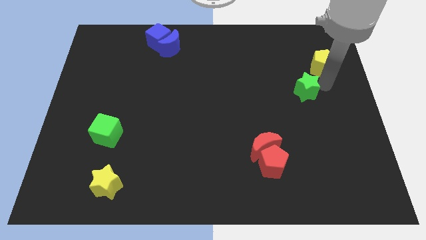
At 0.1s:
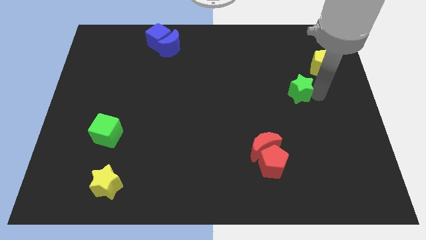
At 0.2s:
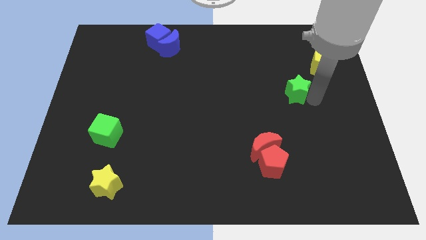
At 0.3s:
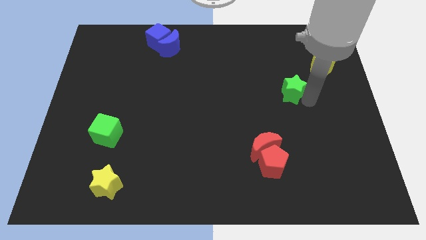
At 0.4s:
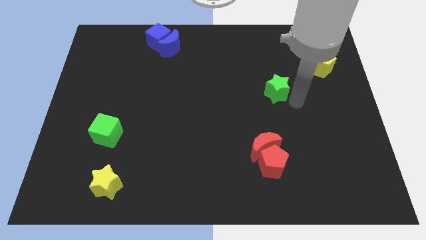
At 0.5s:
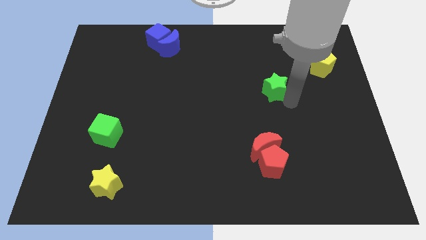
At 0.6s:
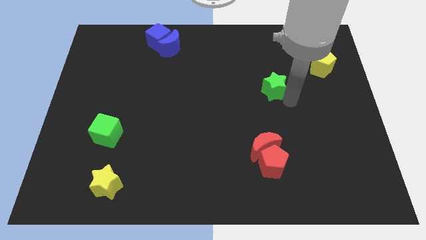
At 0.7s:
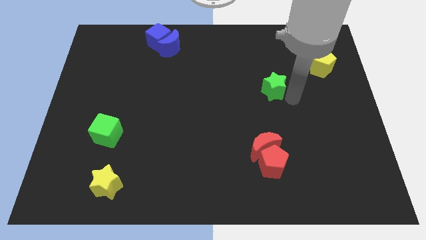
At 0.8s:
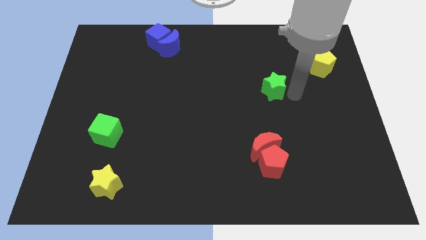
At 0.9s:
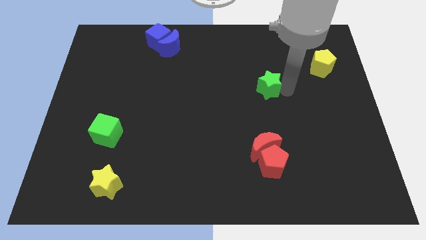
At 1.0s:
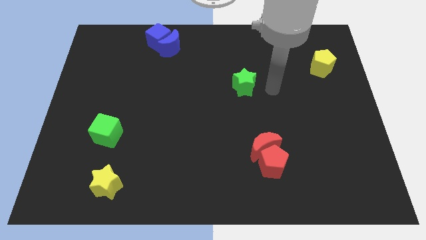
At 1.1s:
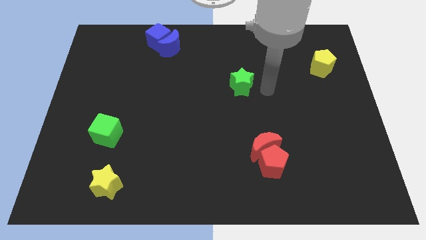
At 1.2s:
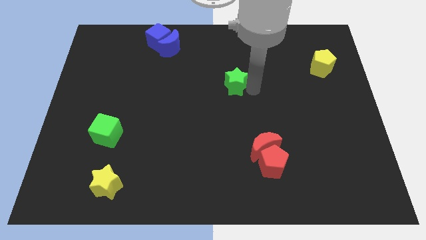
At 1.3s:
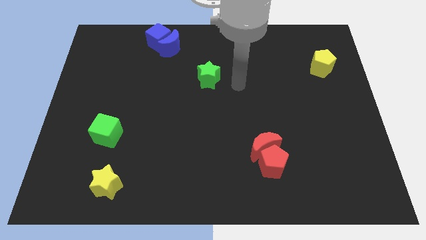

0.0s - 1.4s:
push the green star towards the center of the board

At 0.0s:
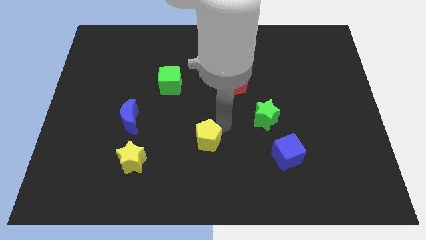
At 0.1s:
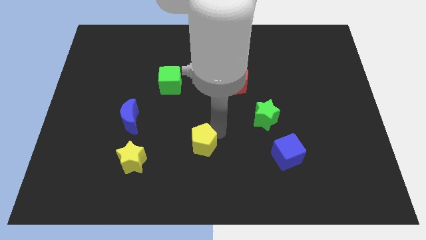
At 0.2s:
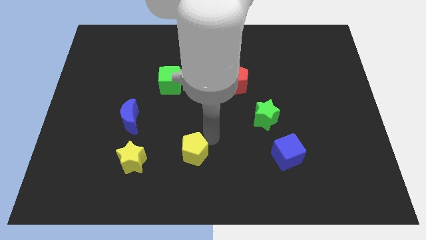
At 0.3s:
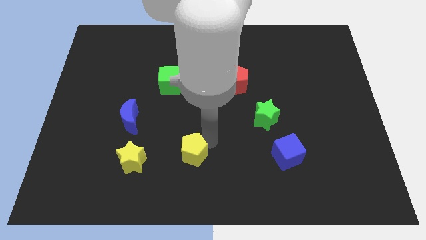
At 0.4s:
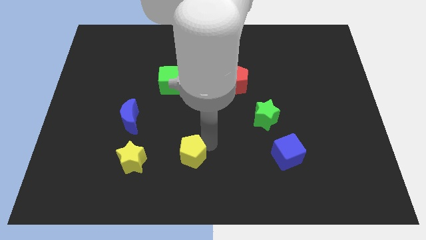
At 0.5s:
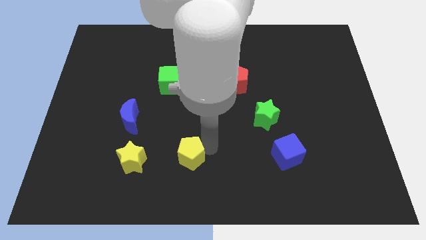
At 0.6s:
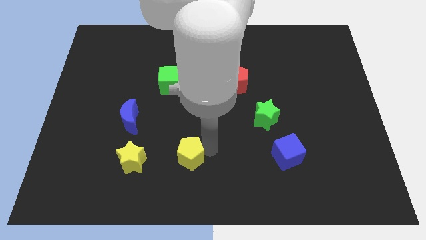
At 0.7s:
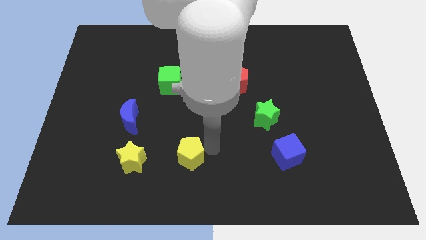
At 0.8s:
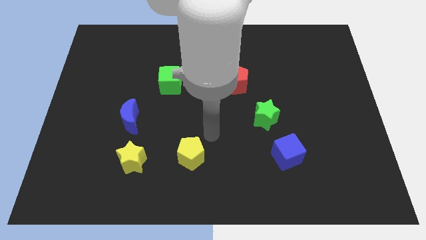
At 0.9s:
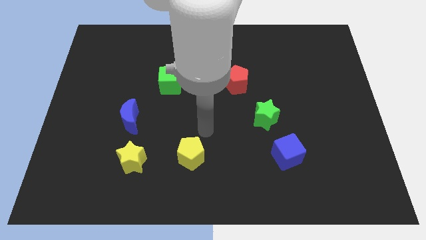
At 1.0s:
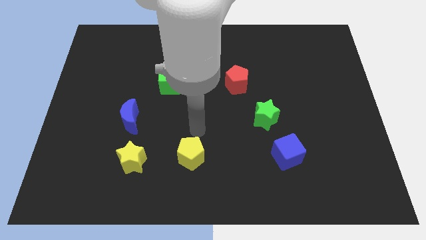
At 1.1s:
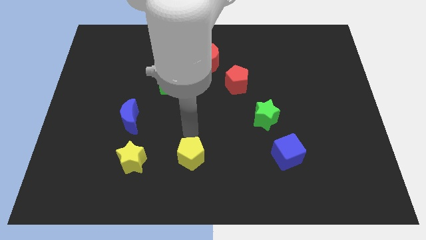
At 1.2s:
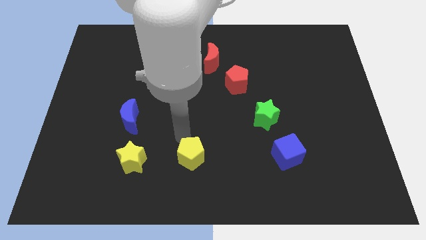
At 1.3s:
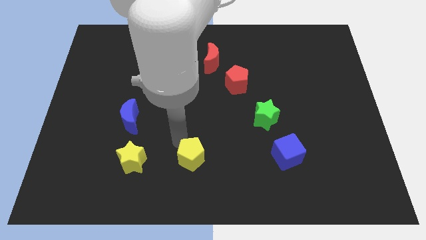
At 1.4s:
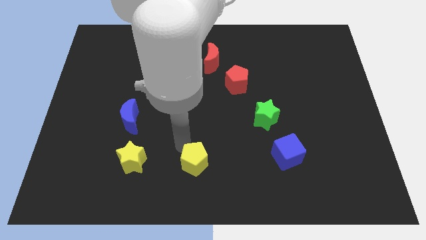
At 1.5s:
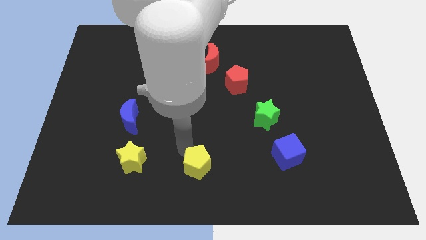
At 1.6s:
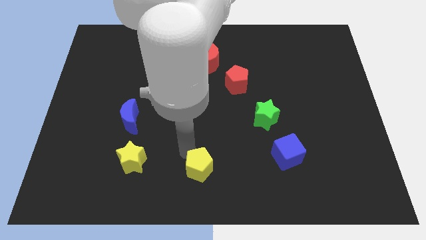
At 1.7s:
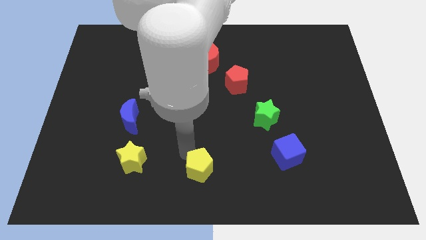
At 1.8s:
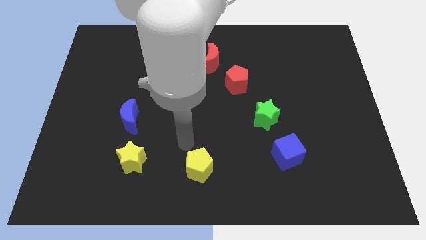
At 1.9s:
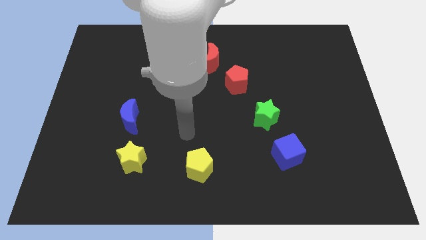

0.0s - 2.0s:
push the yellow pentagon towards the bottom center of board

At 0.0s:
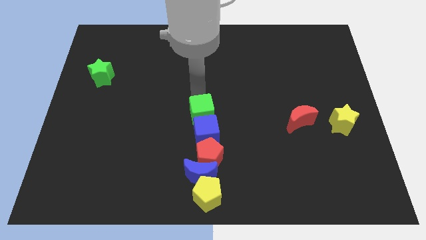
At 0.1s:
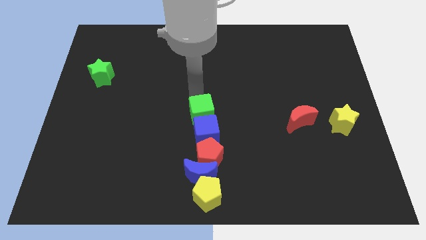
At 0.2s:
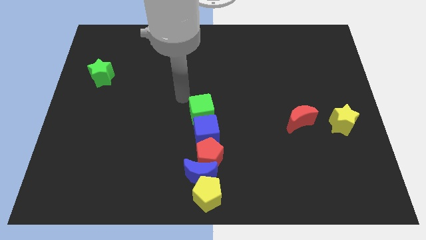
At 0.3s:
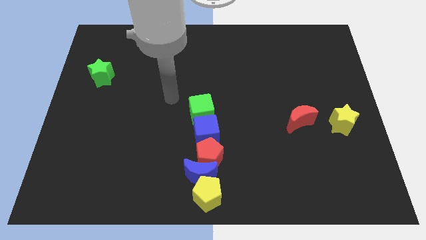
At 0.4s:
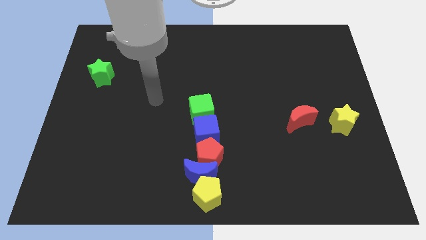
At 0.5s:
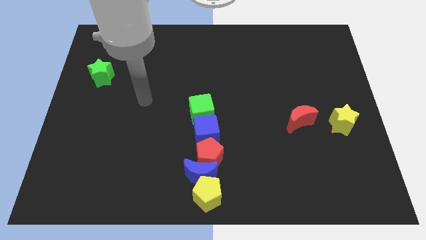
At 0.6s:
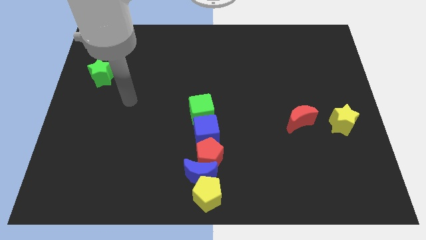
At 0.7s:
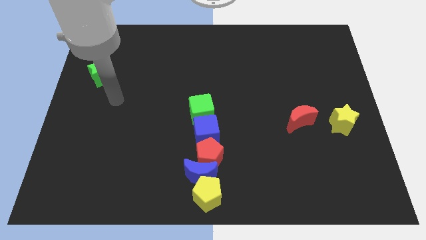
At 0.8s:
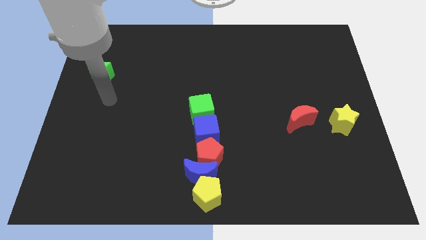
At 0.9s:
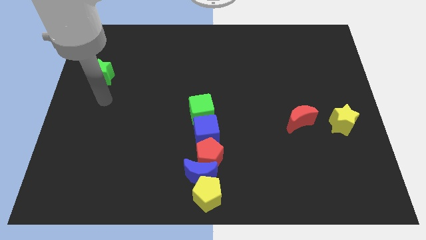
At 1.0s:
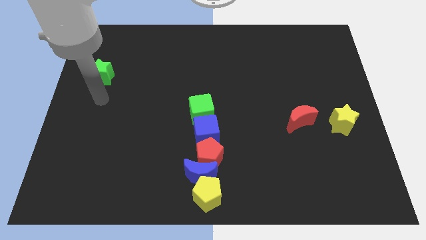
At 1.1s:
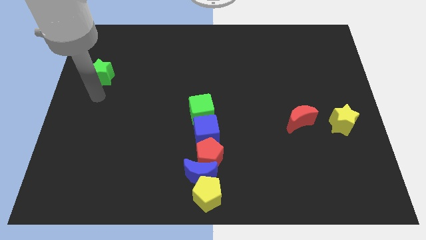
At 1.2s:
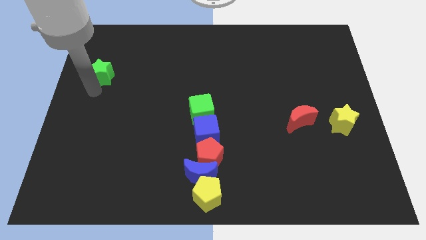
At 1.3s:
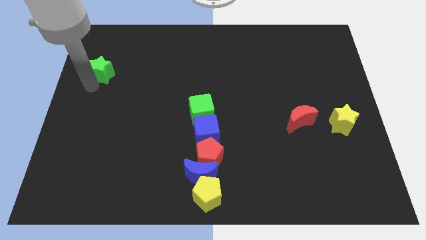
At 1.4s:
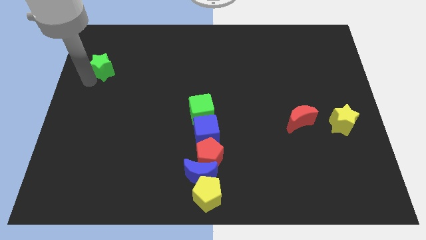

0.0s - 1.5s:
move your arm to the bottom of the green star

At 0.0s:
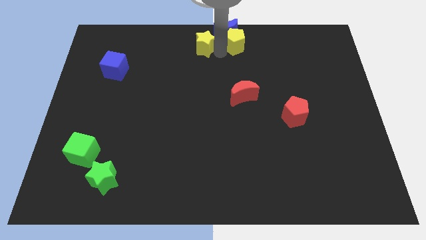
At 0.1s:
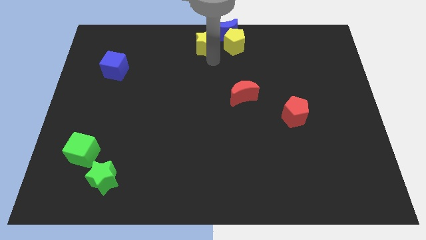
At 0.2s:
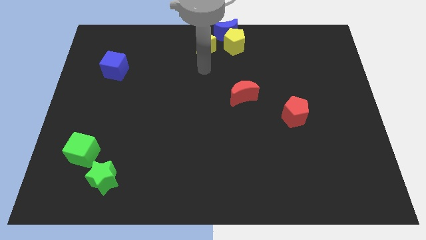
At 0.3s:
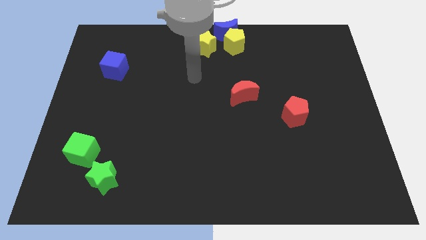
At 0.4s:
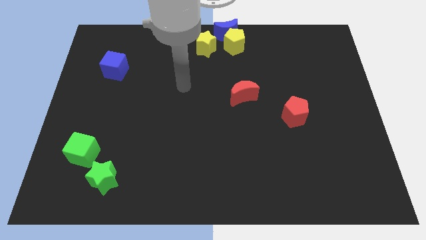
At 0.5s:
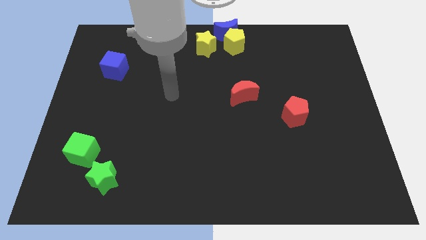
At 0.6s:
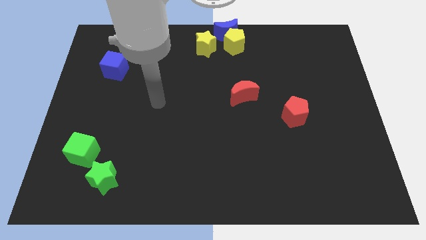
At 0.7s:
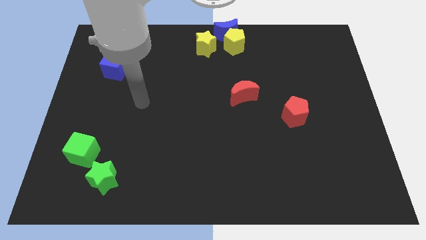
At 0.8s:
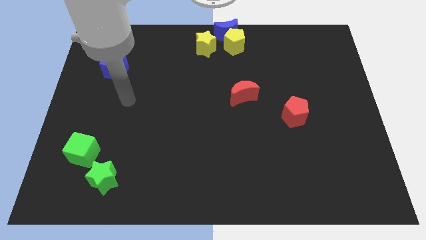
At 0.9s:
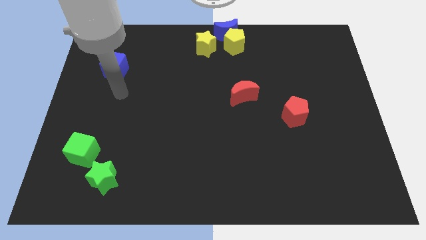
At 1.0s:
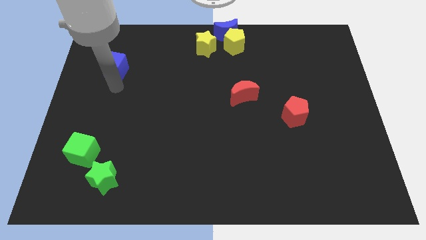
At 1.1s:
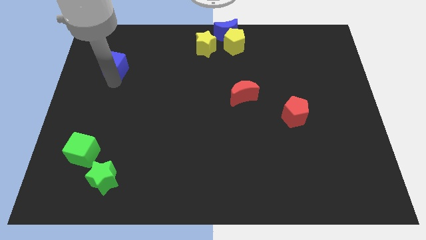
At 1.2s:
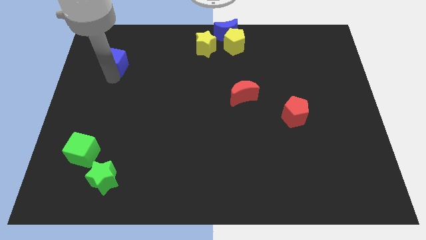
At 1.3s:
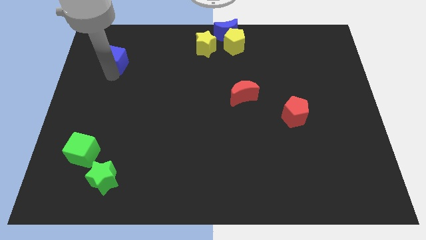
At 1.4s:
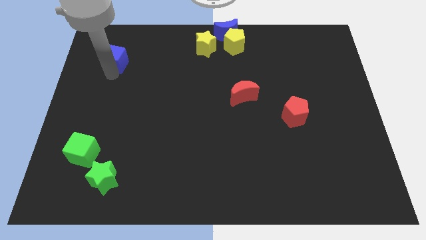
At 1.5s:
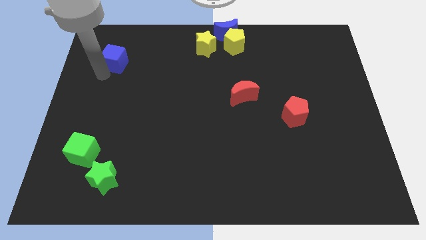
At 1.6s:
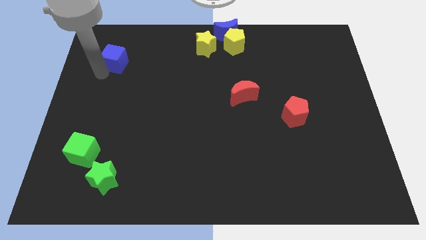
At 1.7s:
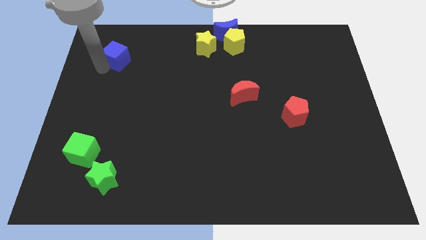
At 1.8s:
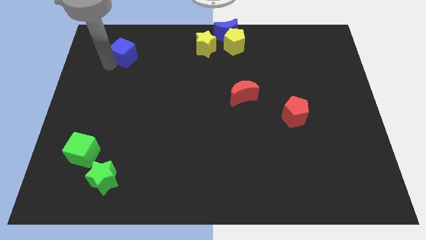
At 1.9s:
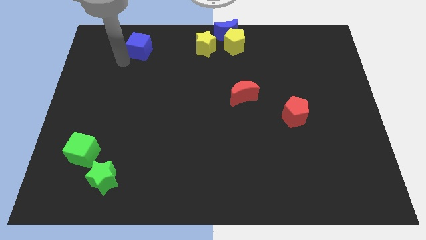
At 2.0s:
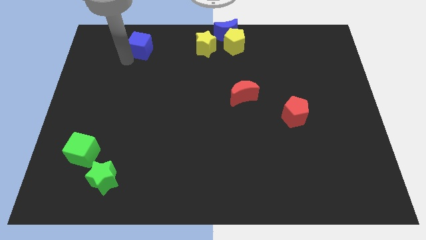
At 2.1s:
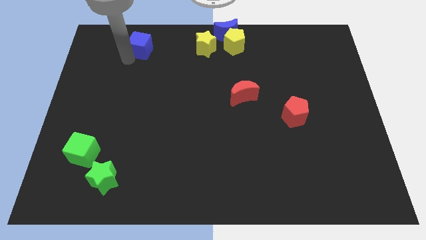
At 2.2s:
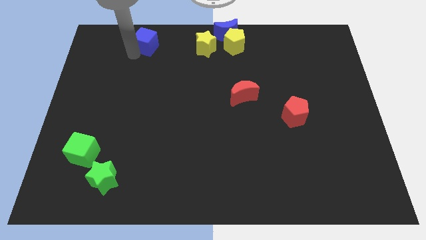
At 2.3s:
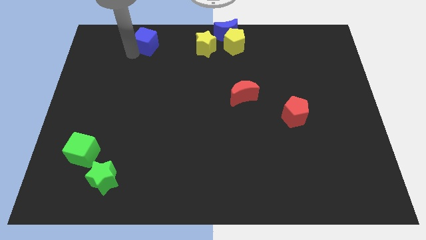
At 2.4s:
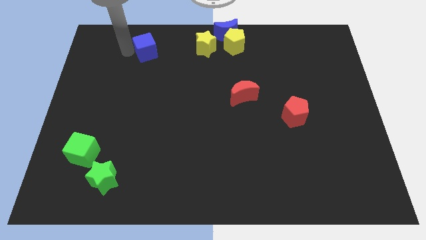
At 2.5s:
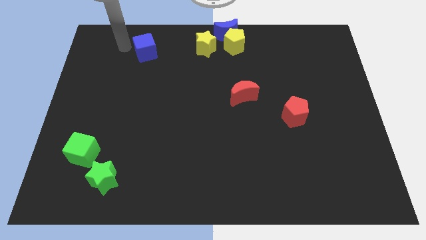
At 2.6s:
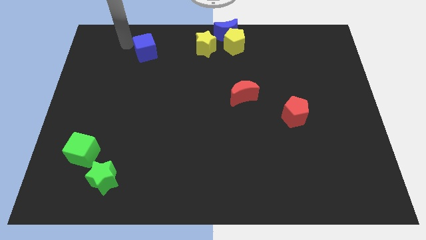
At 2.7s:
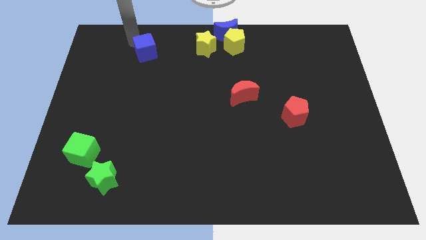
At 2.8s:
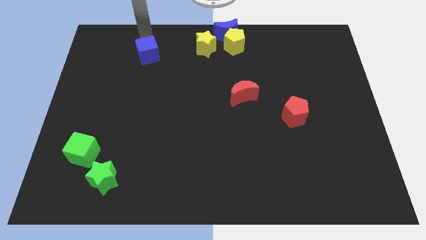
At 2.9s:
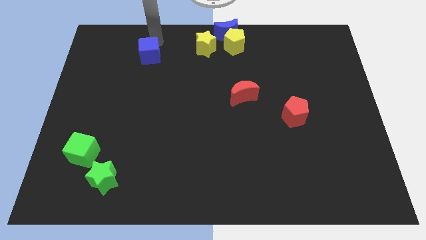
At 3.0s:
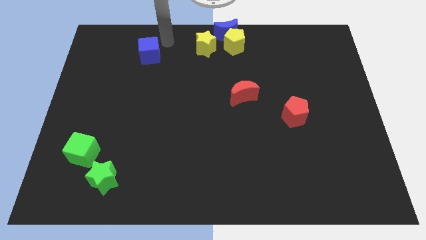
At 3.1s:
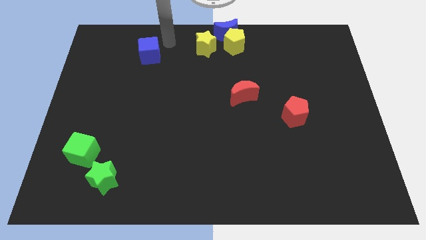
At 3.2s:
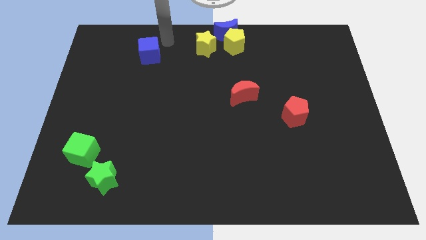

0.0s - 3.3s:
place the blue cube parallel to yellow blocks

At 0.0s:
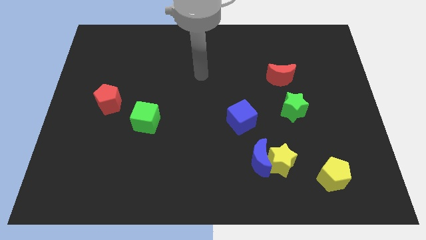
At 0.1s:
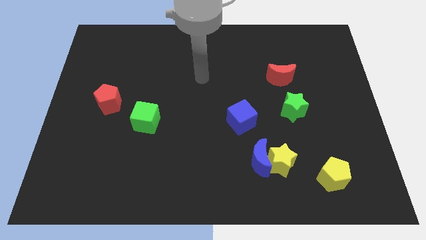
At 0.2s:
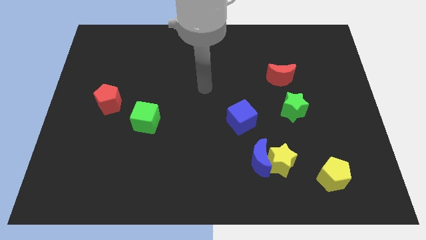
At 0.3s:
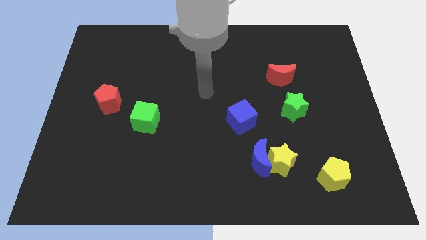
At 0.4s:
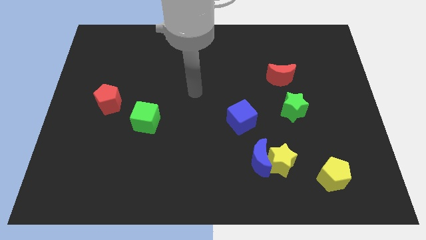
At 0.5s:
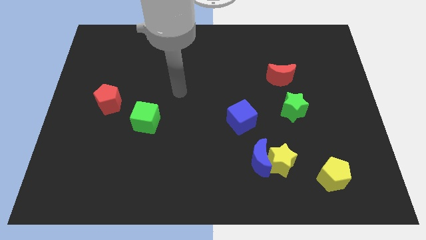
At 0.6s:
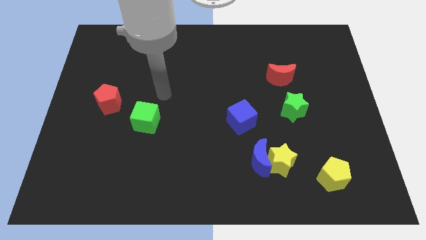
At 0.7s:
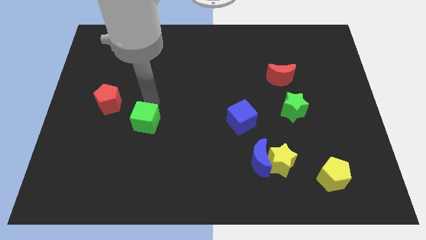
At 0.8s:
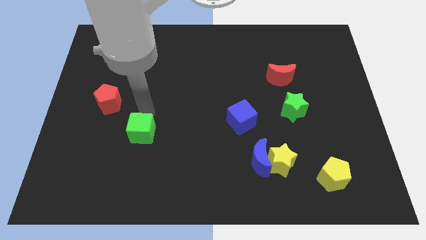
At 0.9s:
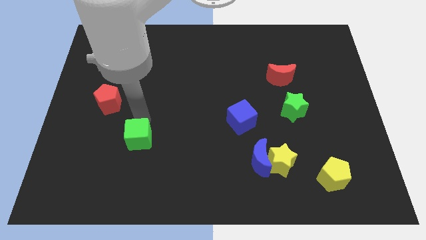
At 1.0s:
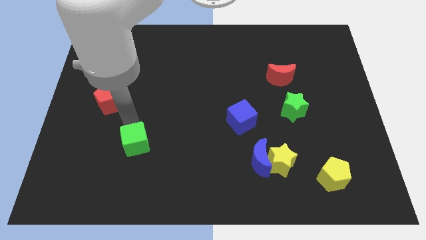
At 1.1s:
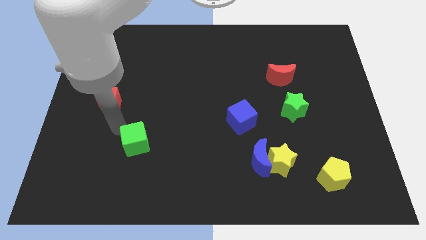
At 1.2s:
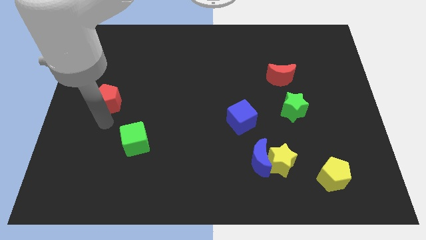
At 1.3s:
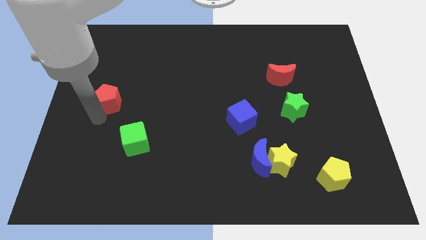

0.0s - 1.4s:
slightly push the green cube to the bottom of the board
